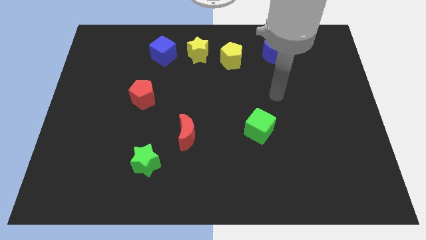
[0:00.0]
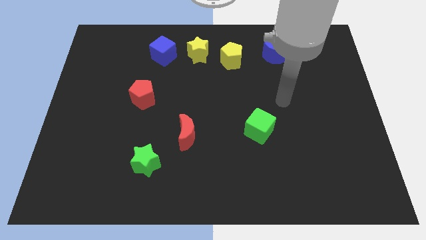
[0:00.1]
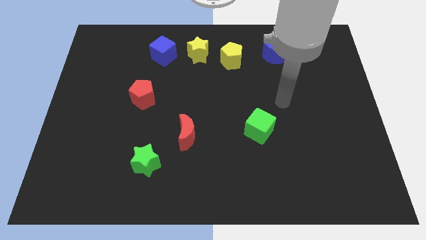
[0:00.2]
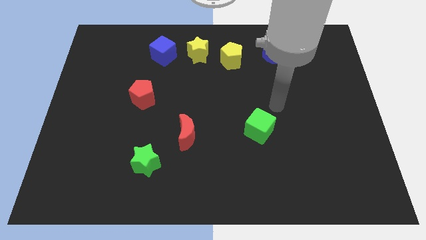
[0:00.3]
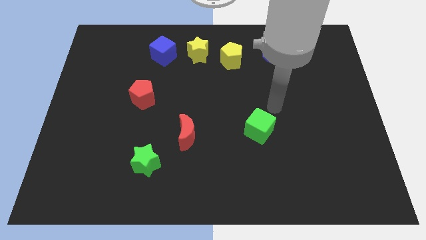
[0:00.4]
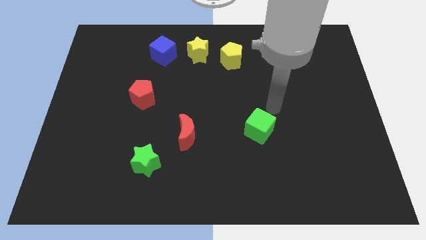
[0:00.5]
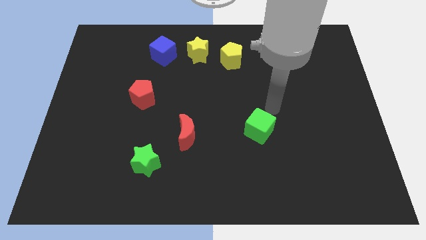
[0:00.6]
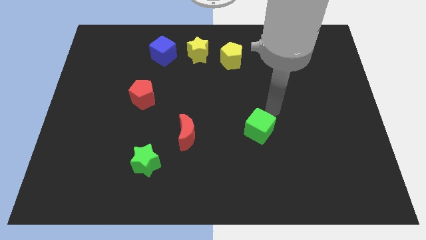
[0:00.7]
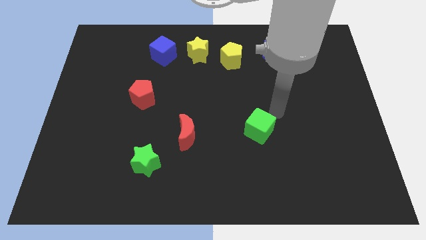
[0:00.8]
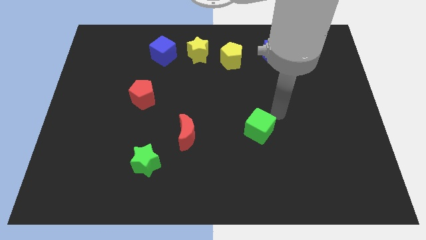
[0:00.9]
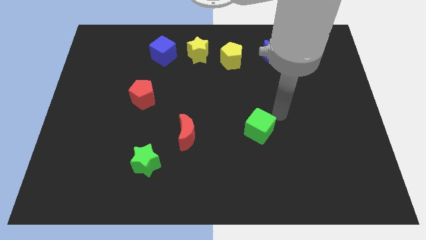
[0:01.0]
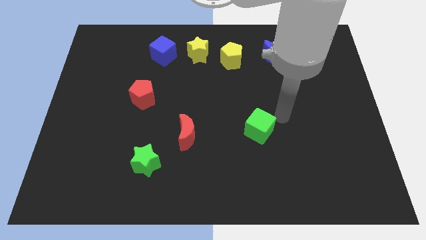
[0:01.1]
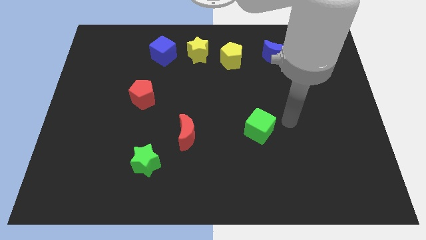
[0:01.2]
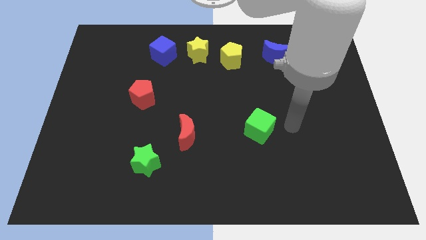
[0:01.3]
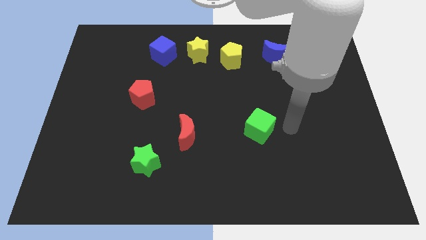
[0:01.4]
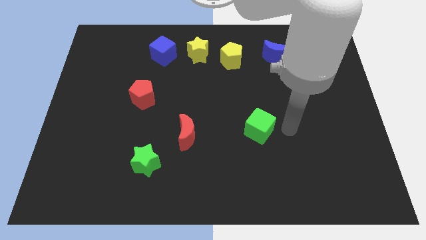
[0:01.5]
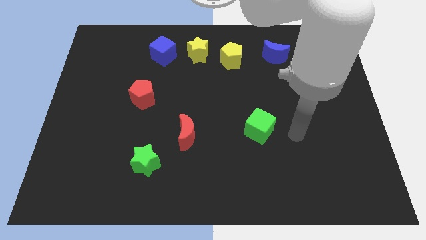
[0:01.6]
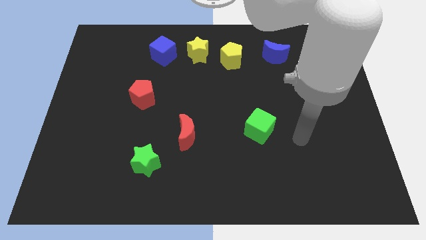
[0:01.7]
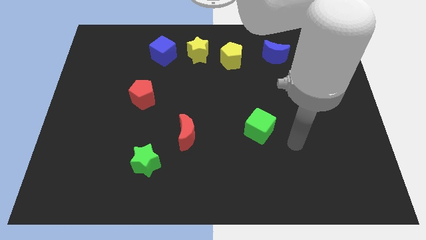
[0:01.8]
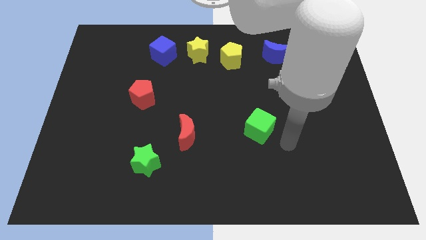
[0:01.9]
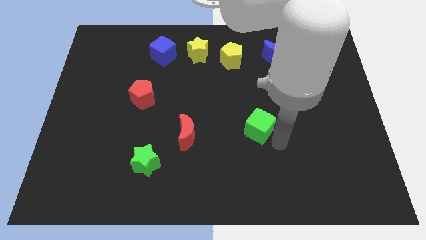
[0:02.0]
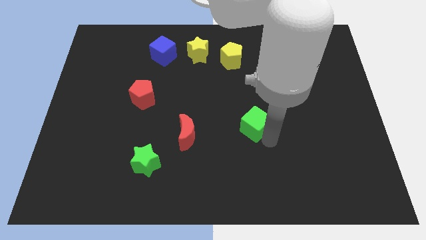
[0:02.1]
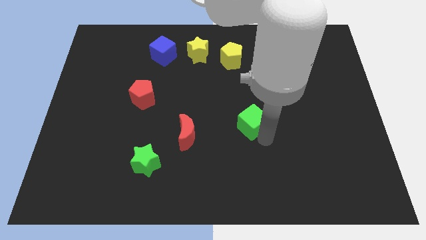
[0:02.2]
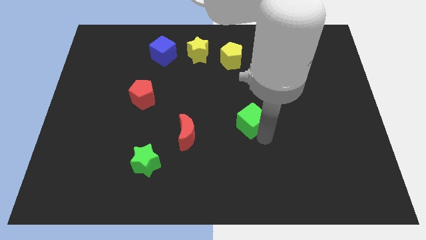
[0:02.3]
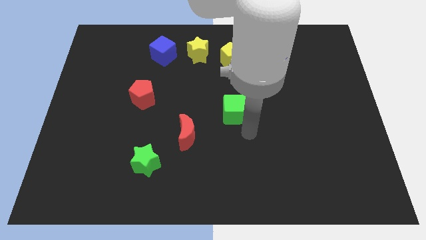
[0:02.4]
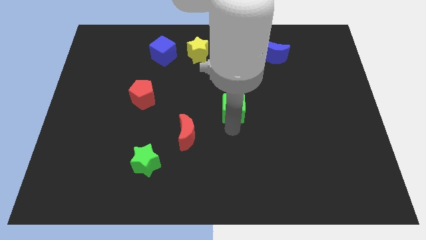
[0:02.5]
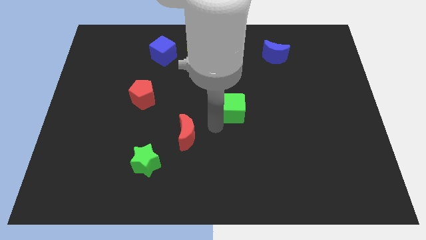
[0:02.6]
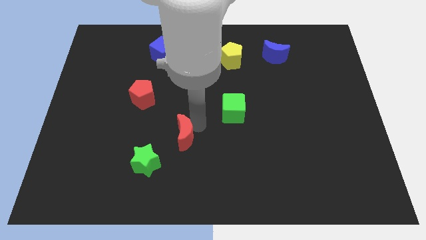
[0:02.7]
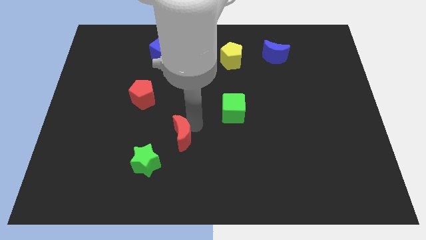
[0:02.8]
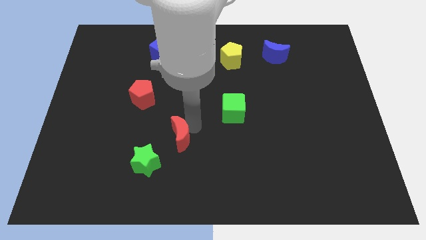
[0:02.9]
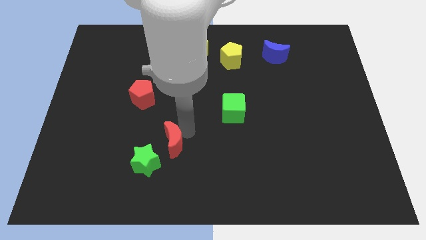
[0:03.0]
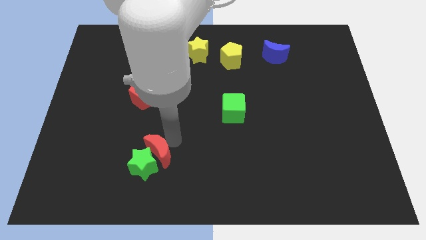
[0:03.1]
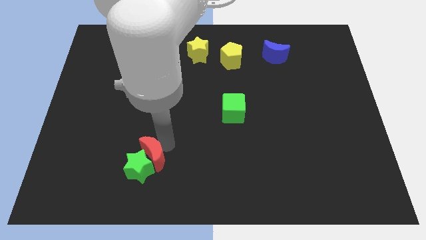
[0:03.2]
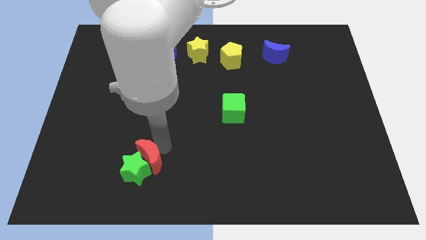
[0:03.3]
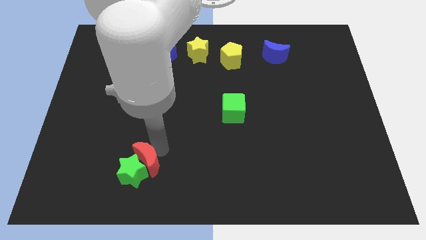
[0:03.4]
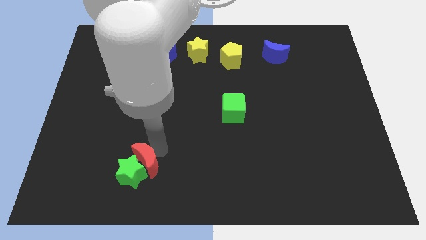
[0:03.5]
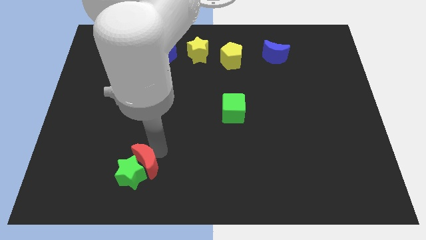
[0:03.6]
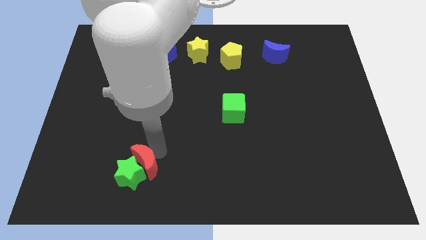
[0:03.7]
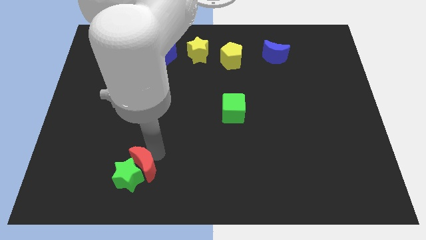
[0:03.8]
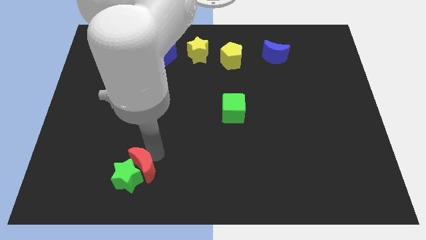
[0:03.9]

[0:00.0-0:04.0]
place the green cube down the yellow pentagon

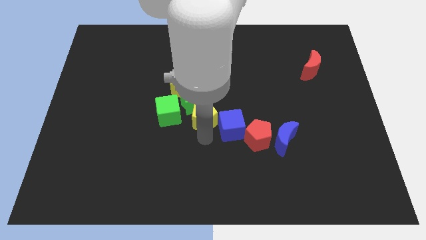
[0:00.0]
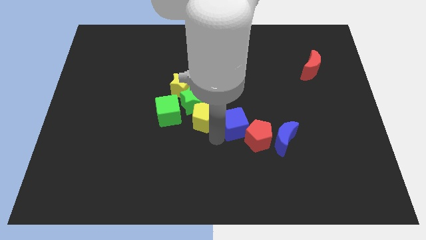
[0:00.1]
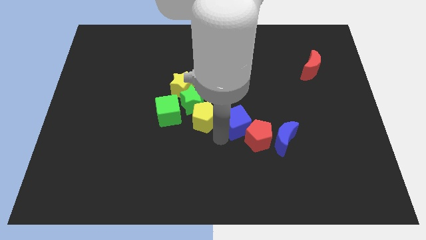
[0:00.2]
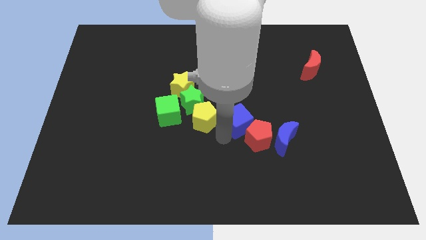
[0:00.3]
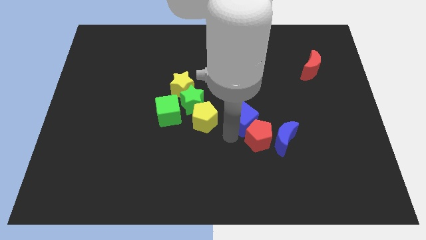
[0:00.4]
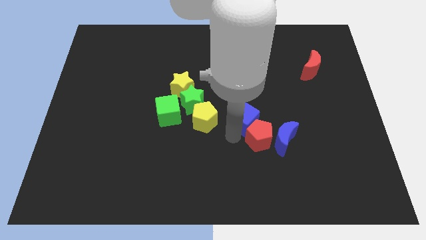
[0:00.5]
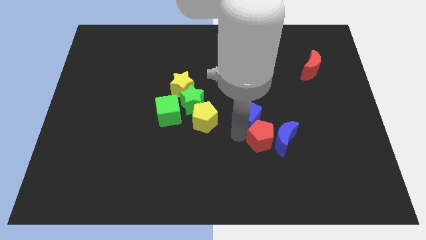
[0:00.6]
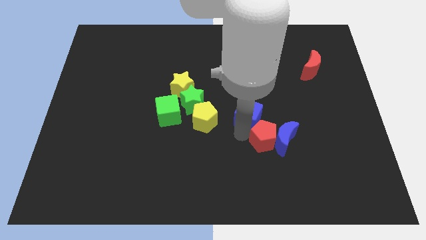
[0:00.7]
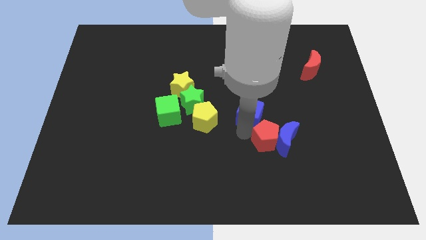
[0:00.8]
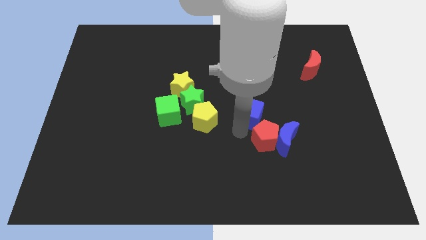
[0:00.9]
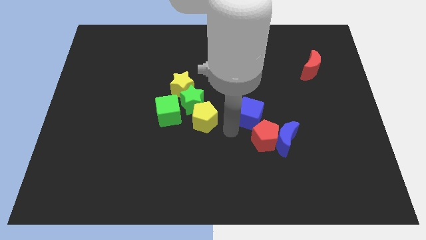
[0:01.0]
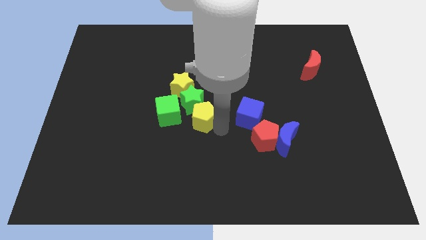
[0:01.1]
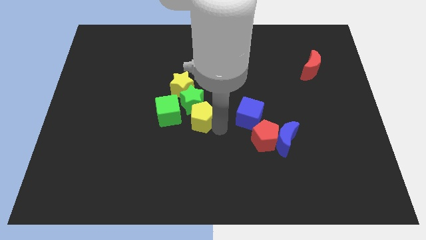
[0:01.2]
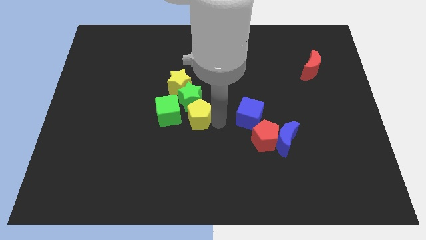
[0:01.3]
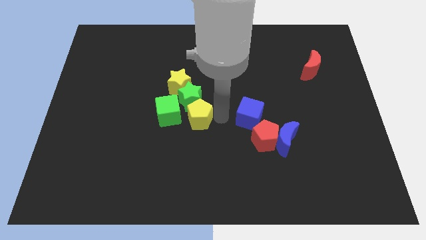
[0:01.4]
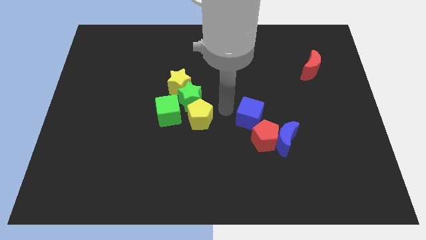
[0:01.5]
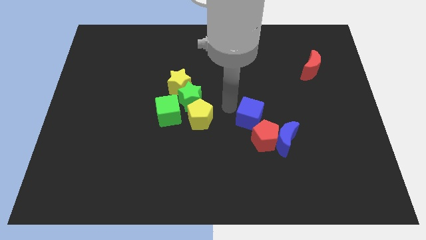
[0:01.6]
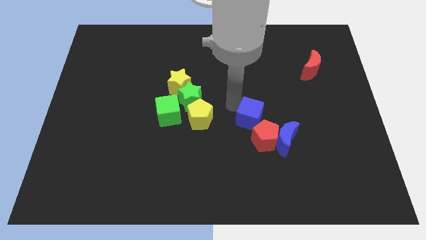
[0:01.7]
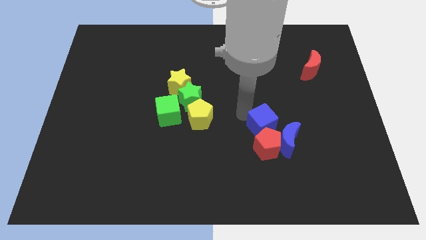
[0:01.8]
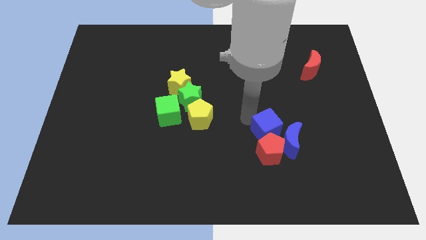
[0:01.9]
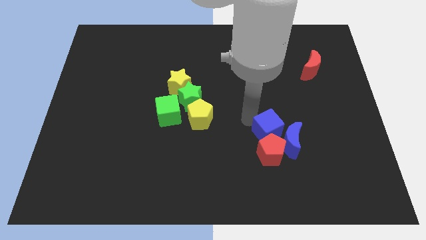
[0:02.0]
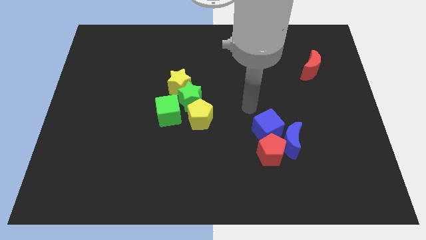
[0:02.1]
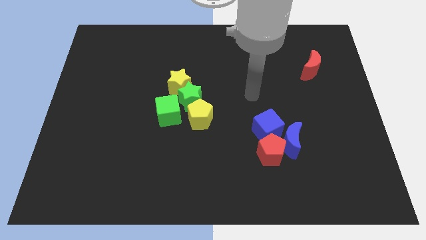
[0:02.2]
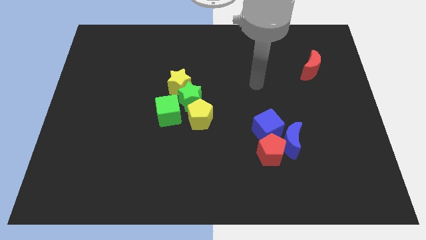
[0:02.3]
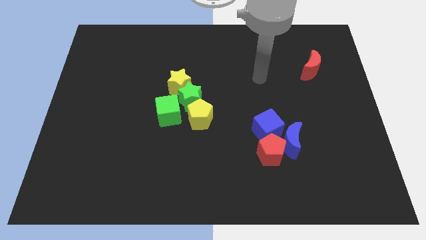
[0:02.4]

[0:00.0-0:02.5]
place the blue cube red pentagon and blue moon close to each other

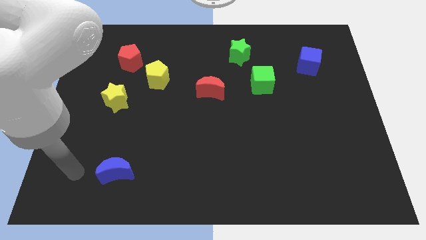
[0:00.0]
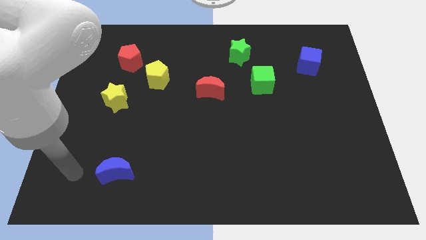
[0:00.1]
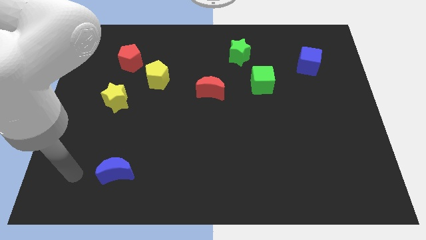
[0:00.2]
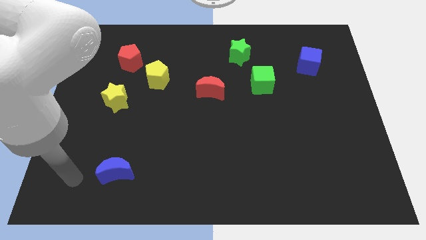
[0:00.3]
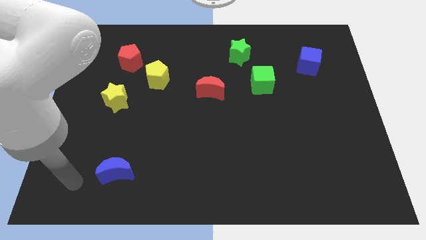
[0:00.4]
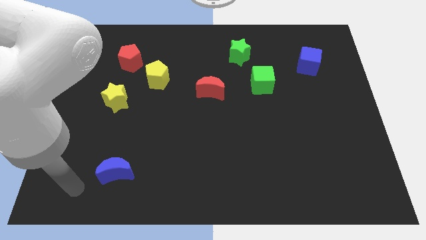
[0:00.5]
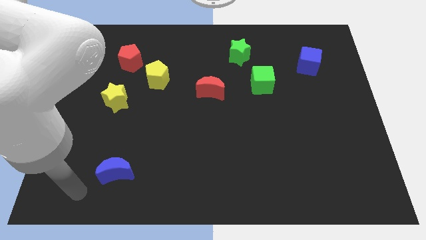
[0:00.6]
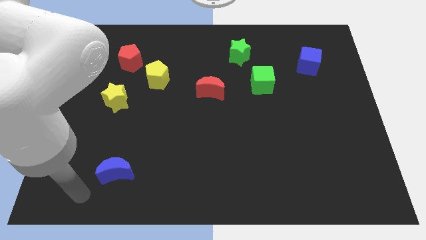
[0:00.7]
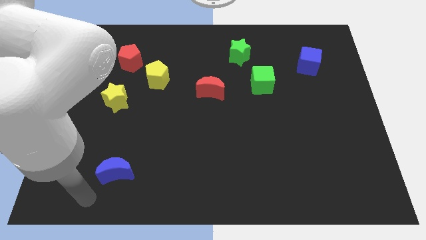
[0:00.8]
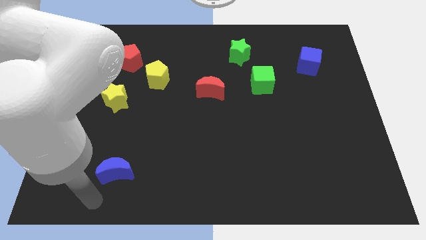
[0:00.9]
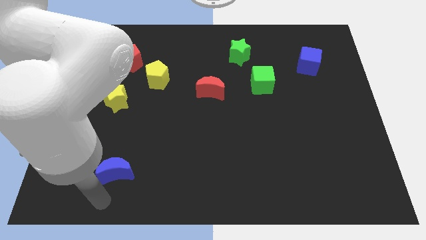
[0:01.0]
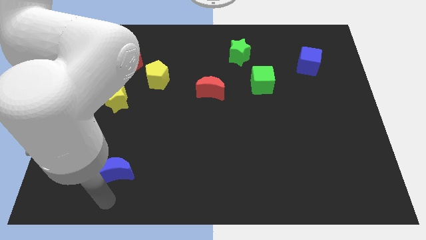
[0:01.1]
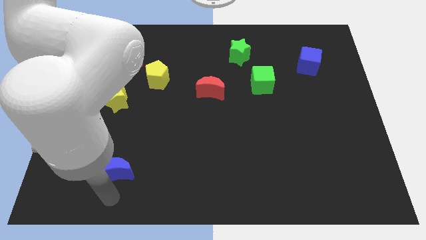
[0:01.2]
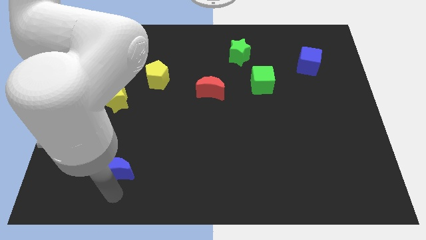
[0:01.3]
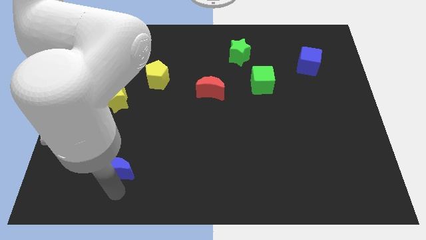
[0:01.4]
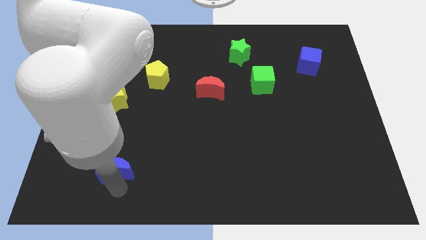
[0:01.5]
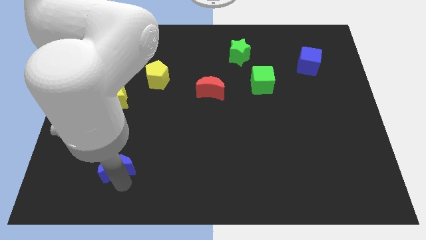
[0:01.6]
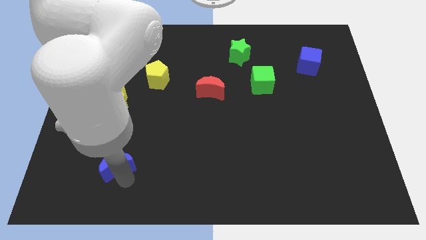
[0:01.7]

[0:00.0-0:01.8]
place your arm below the blue moon

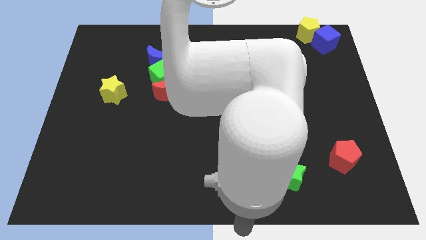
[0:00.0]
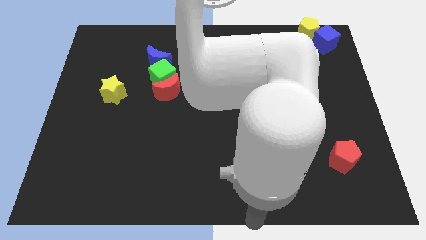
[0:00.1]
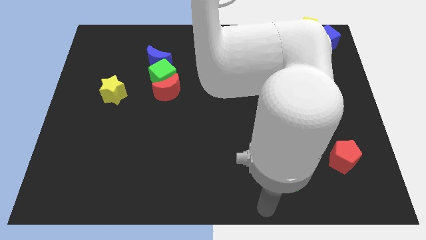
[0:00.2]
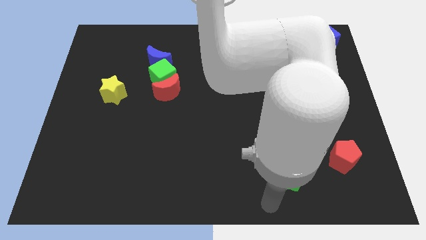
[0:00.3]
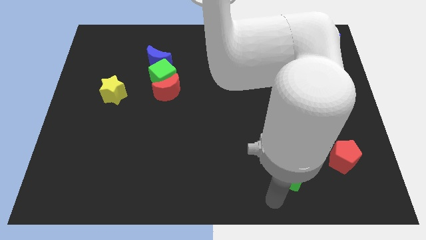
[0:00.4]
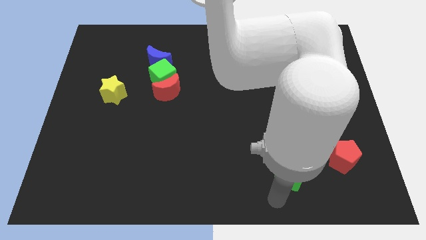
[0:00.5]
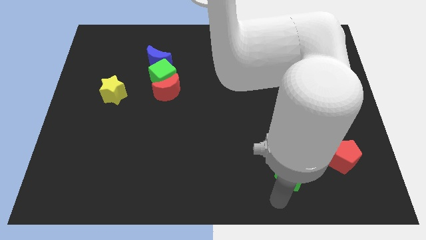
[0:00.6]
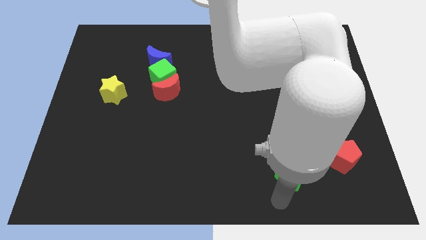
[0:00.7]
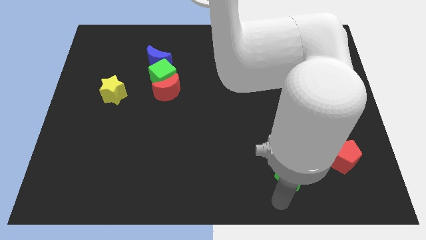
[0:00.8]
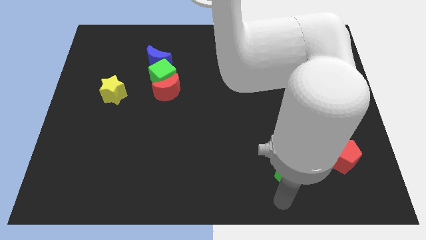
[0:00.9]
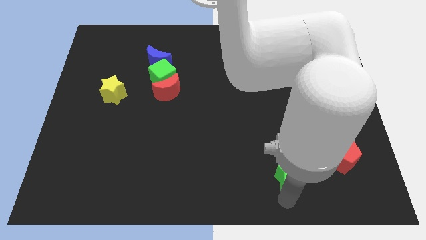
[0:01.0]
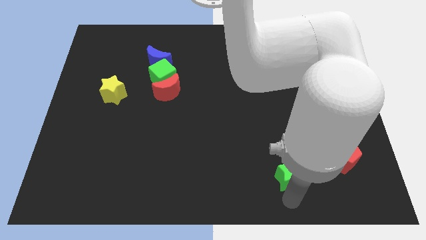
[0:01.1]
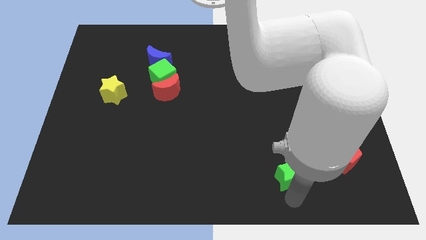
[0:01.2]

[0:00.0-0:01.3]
touch the bottom side of the green star
